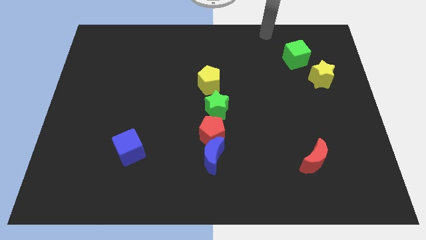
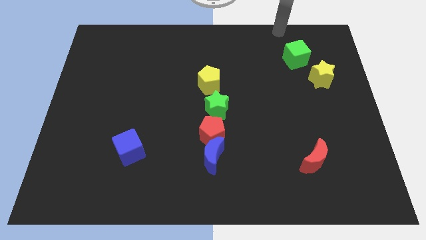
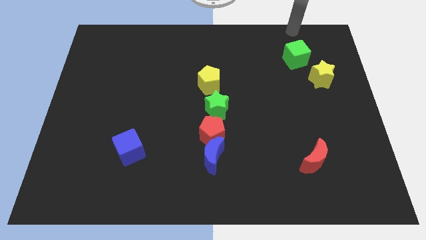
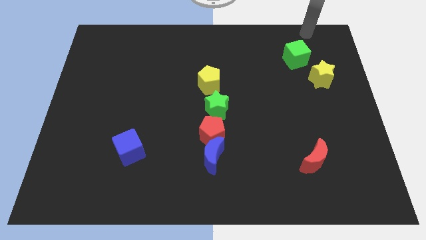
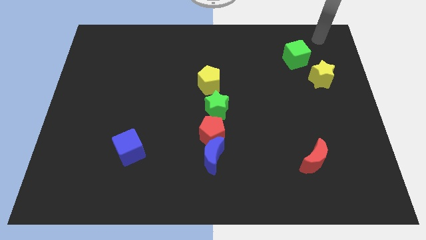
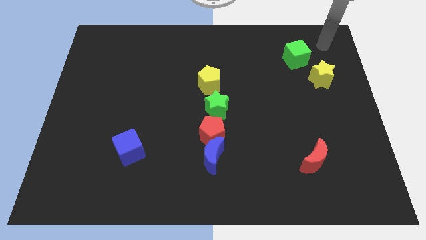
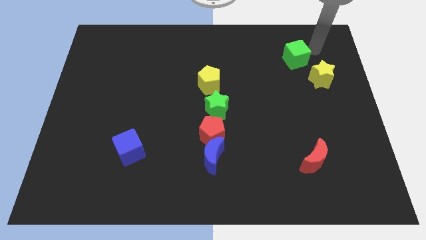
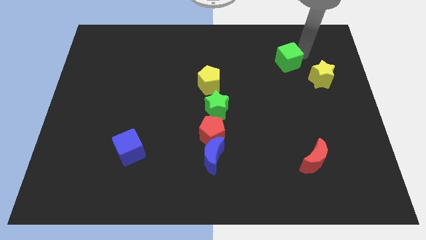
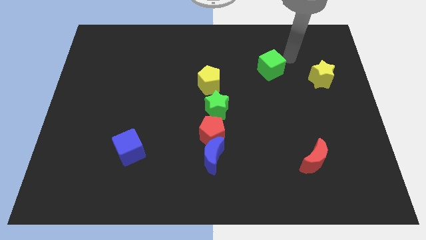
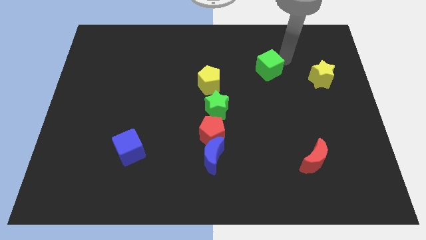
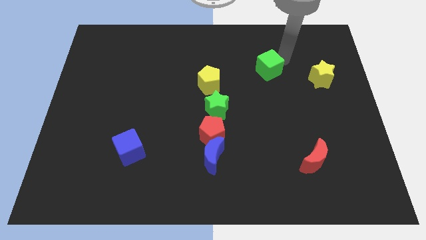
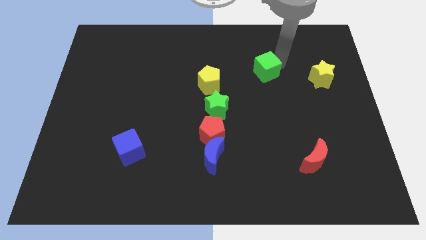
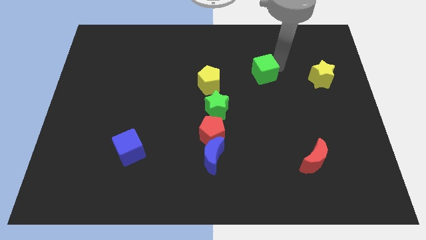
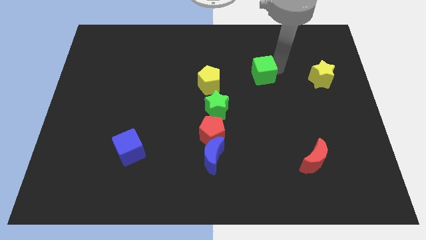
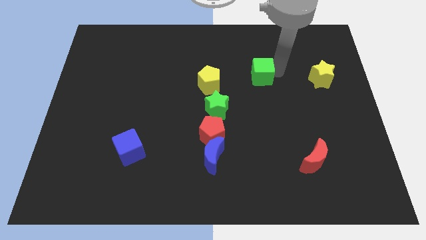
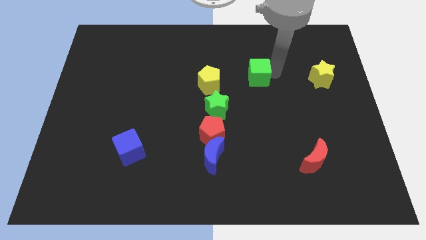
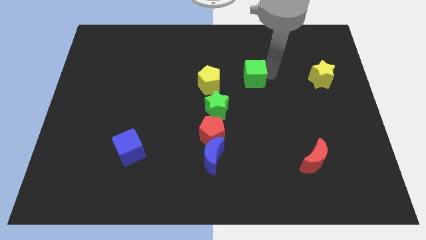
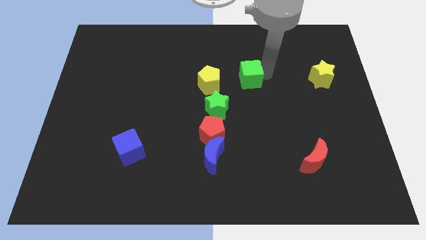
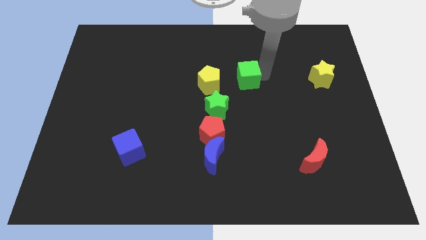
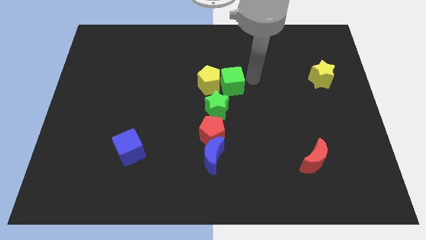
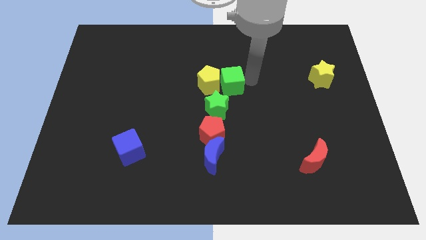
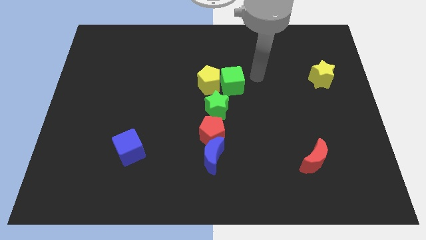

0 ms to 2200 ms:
slide the green cube close to the yellow pentagon

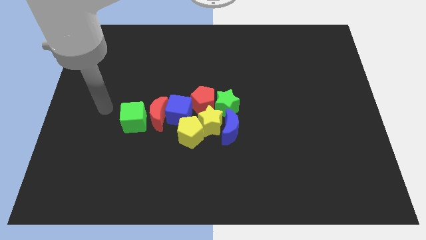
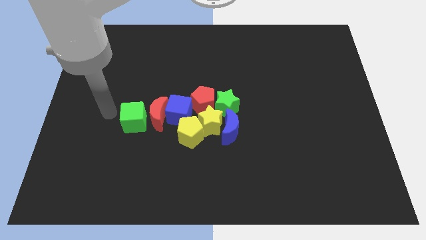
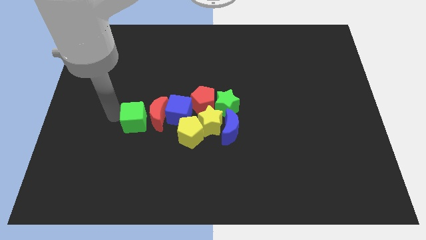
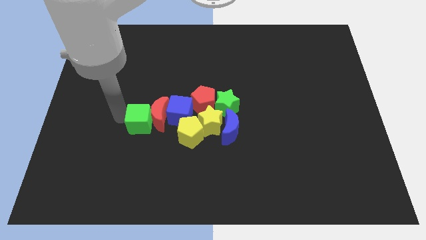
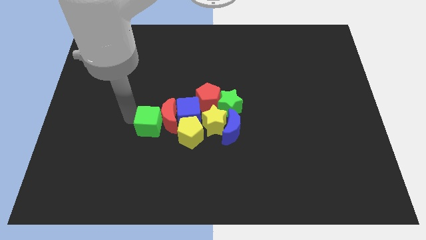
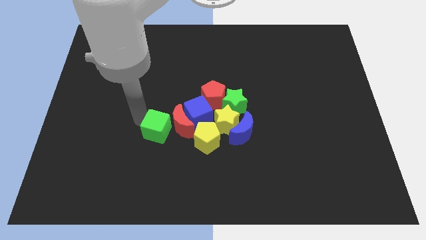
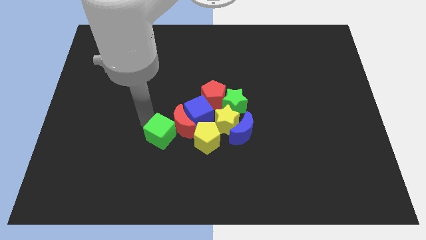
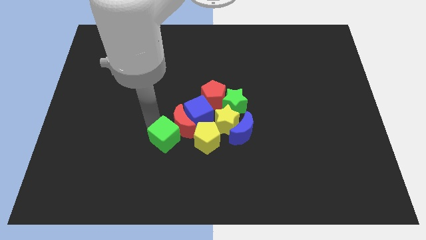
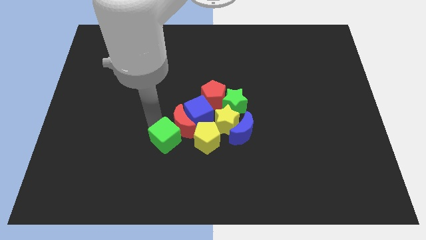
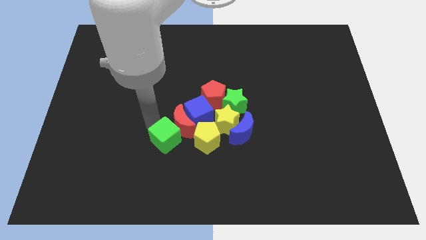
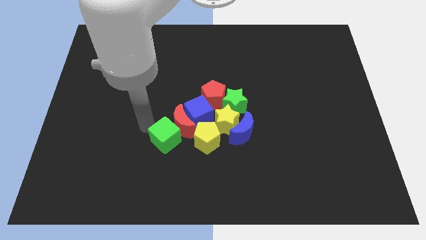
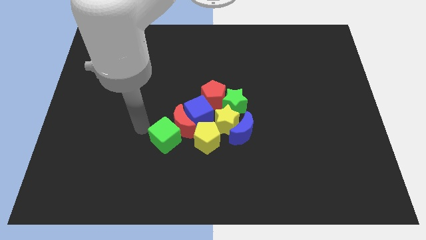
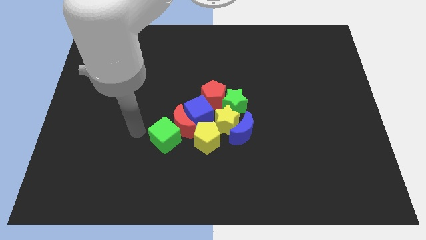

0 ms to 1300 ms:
place the green cube left to the yellow pentagon

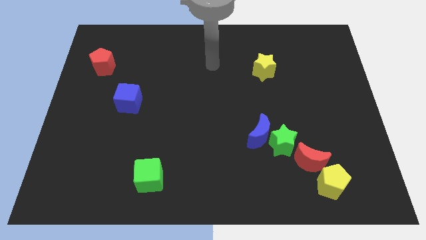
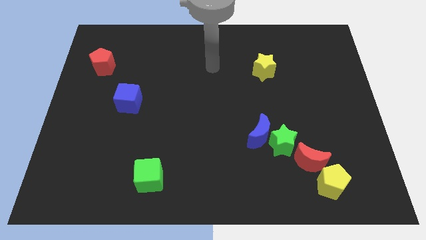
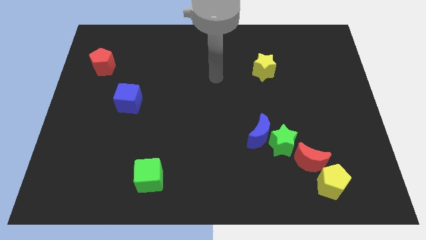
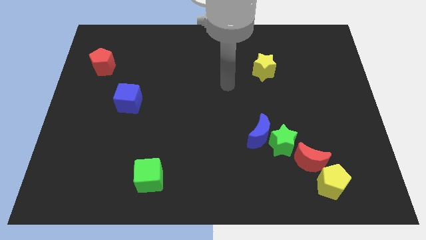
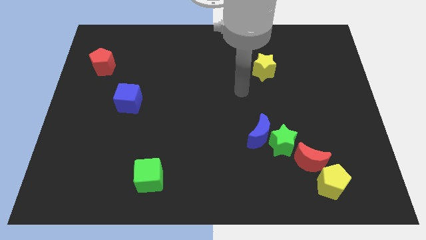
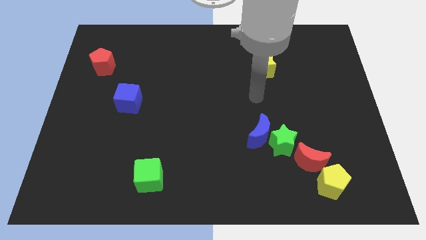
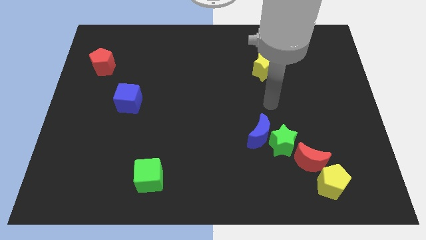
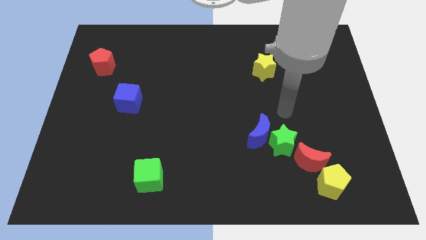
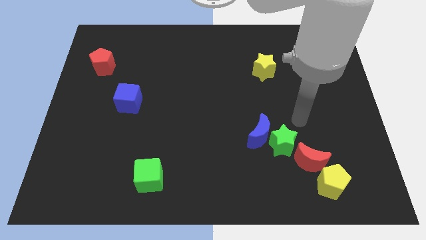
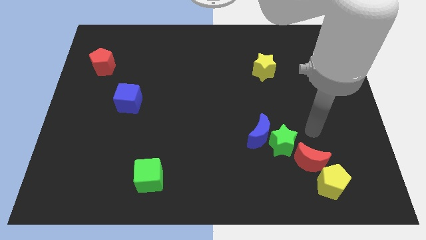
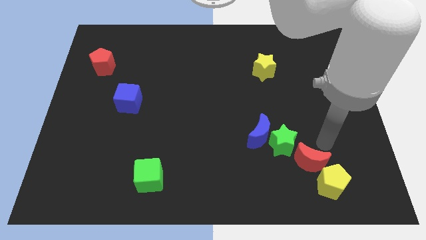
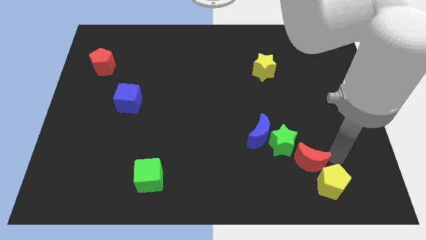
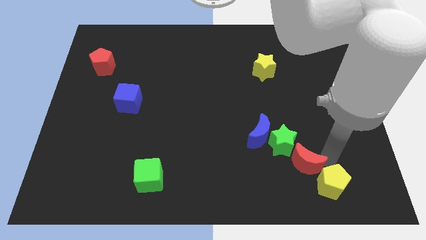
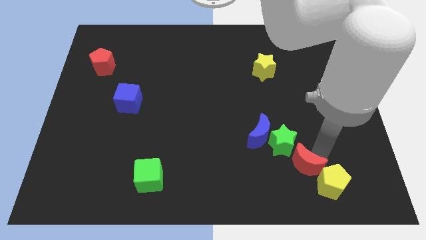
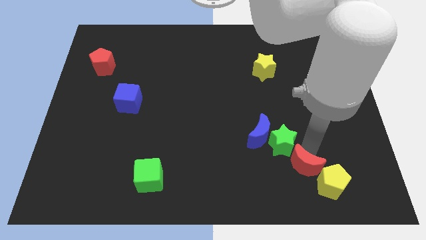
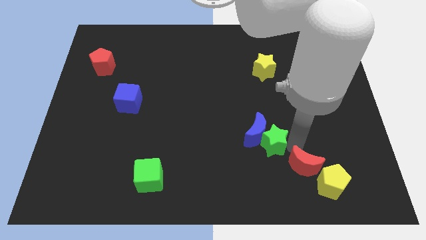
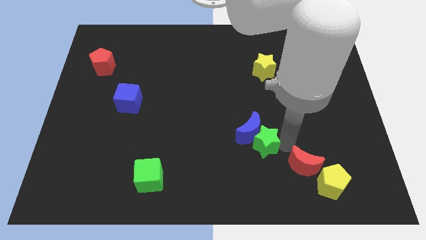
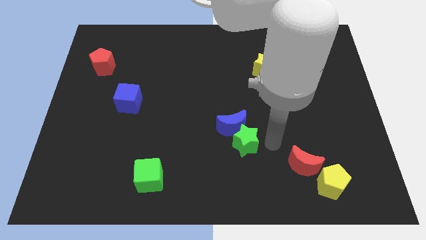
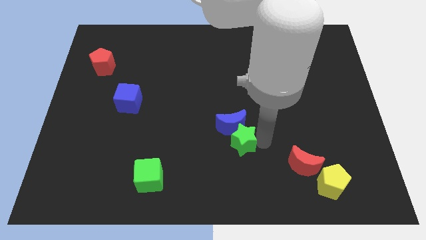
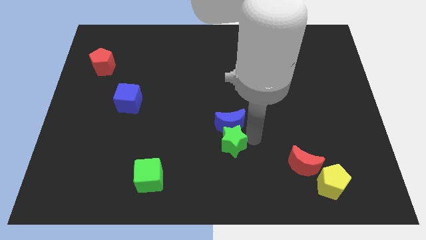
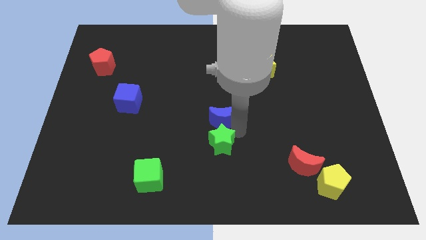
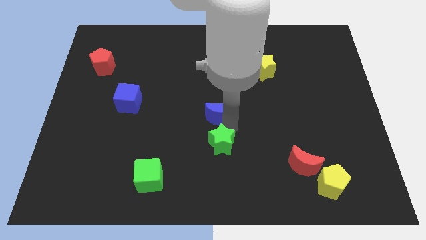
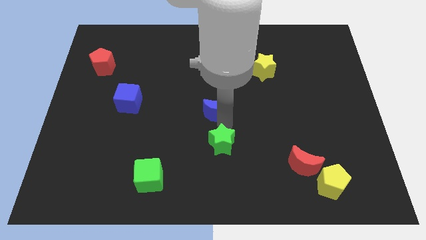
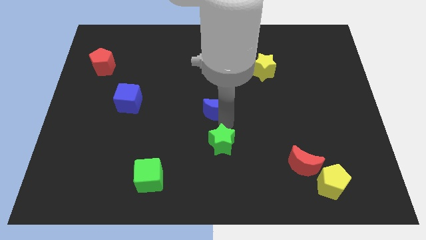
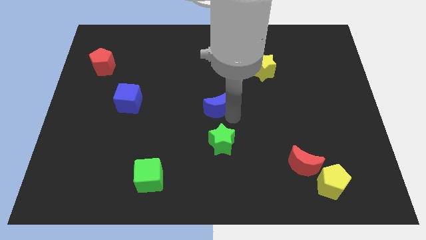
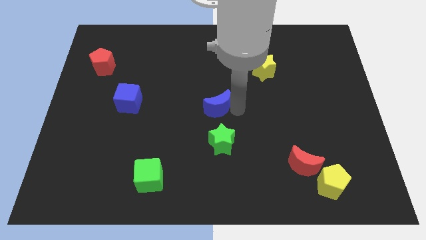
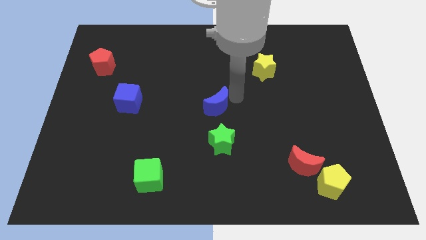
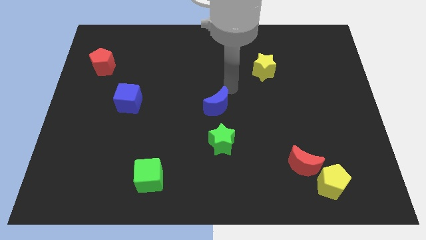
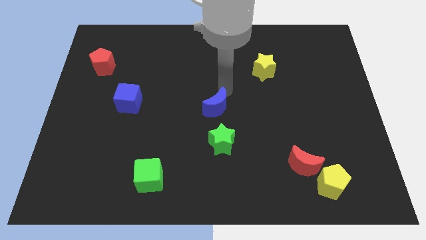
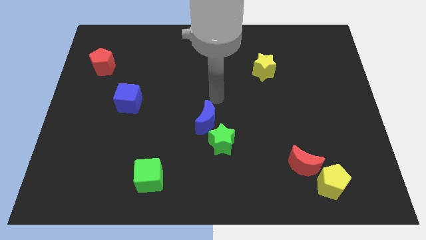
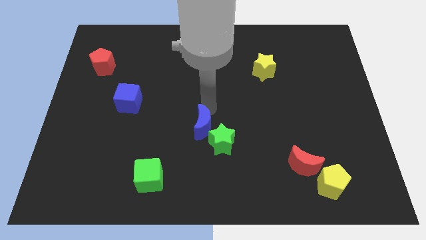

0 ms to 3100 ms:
push the blue crescent to the center of the board

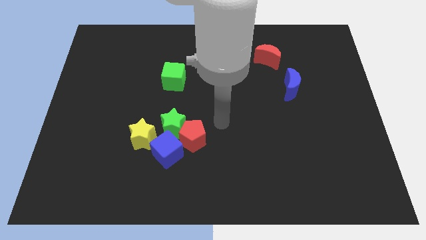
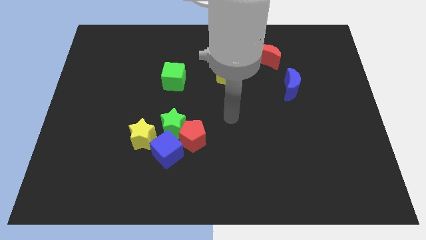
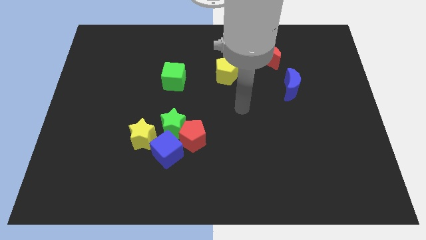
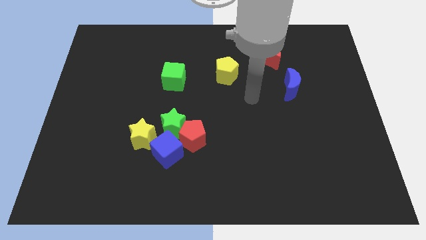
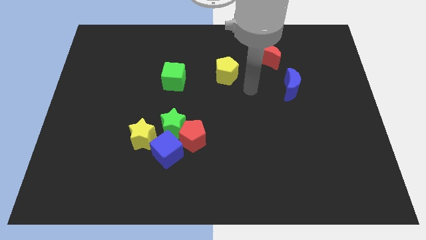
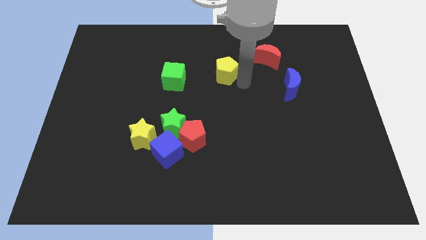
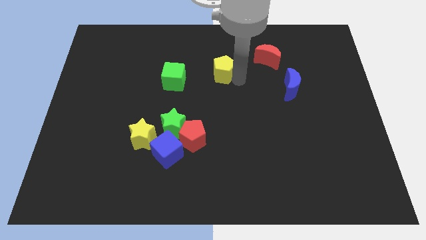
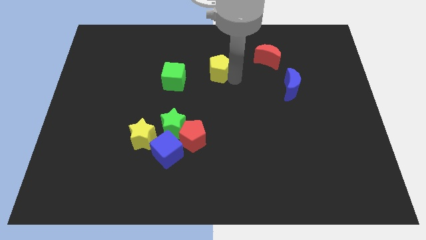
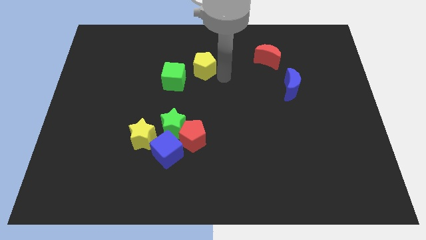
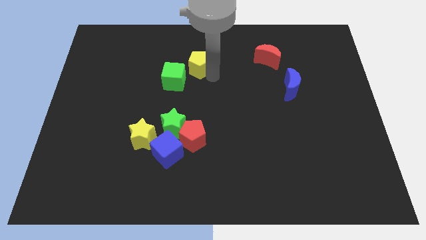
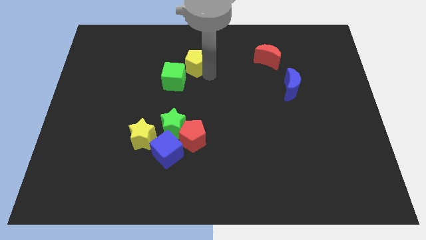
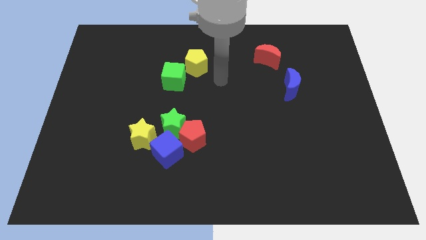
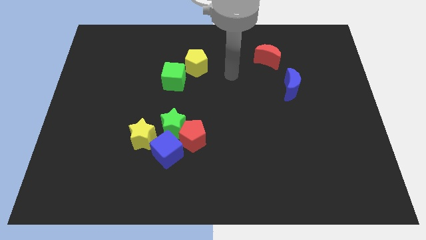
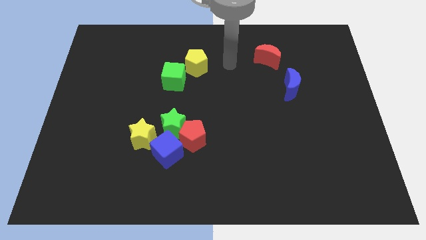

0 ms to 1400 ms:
move the yellow pentagon diagonally top right to green cube

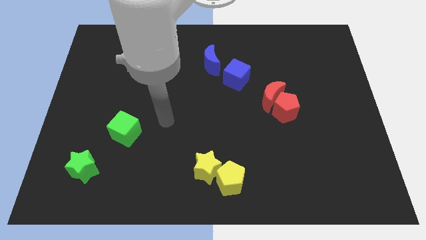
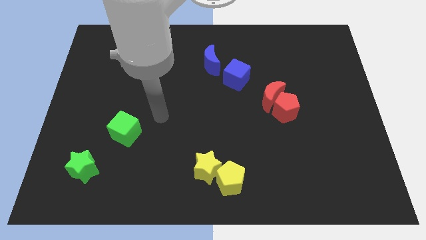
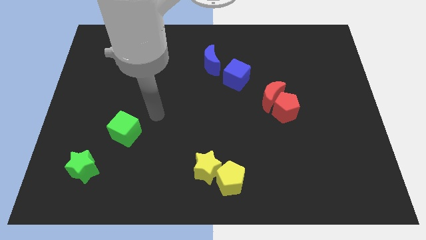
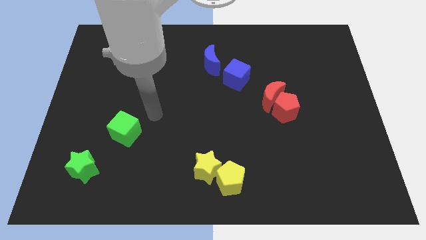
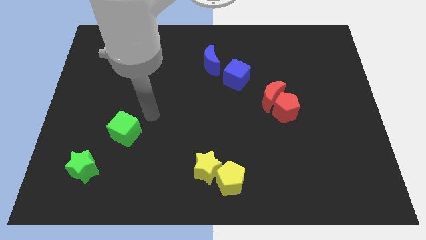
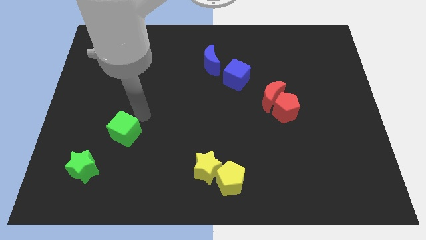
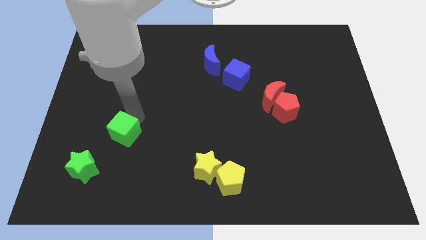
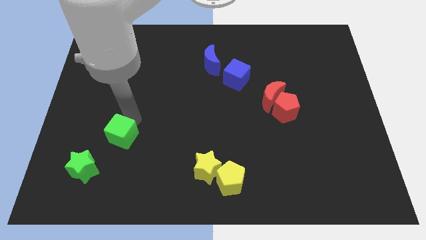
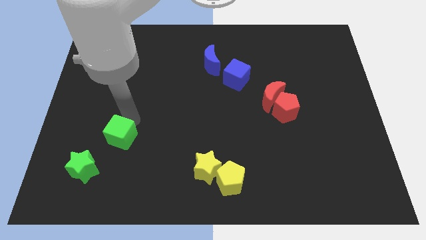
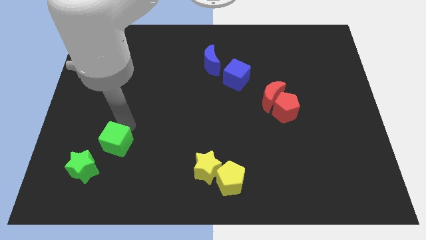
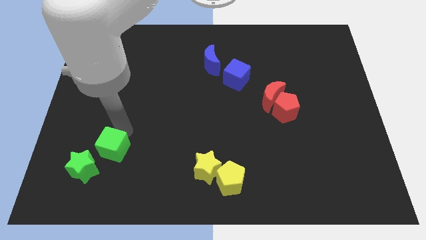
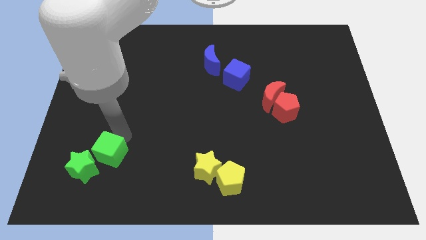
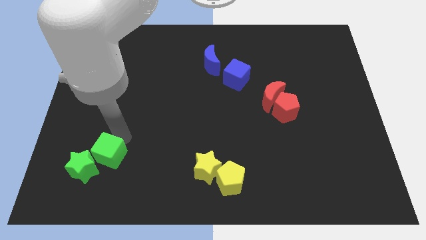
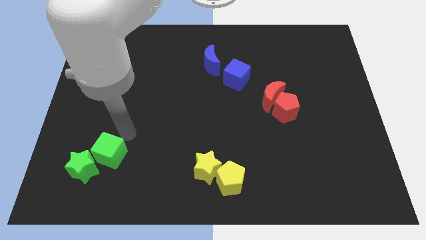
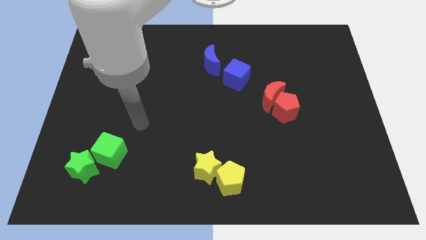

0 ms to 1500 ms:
move the green cube into the green star
